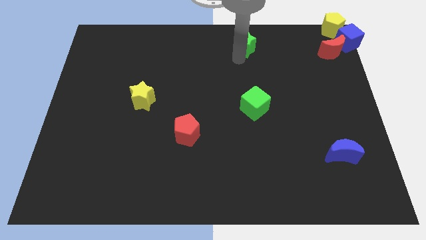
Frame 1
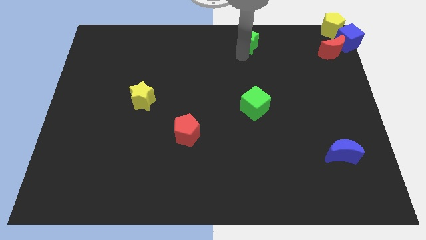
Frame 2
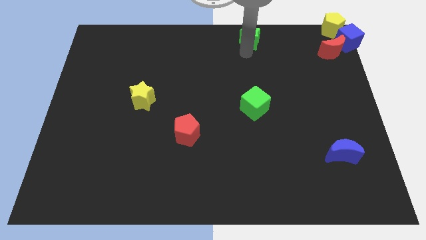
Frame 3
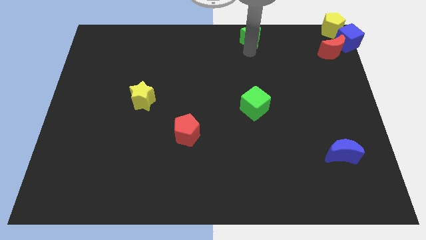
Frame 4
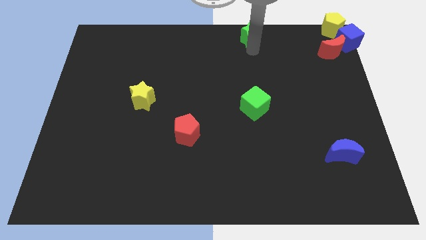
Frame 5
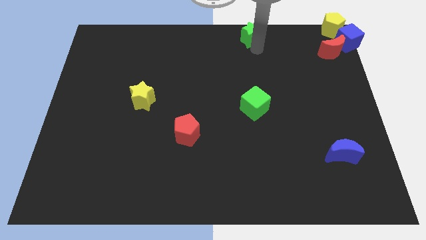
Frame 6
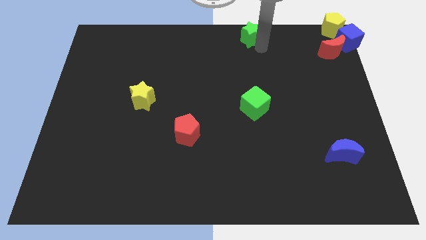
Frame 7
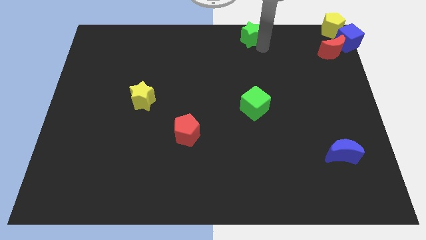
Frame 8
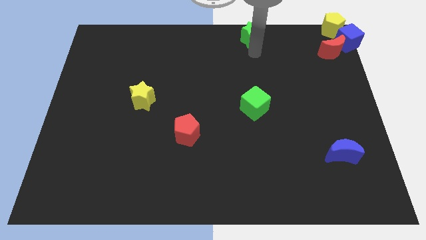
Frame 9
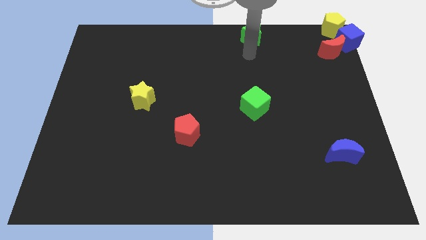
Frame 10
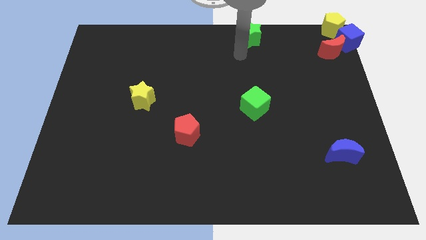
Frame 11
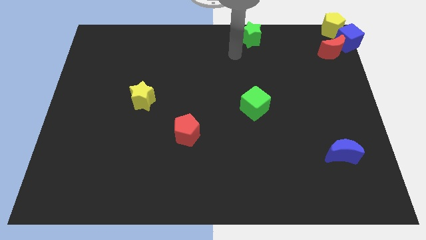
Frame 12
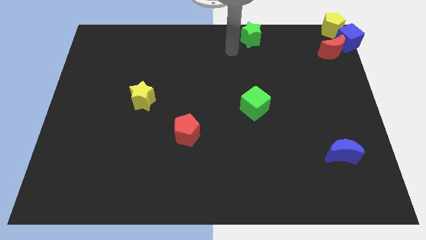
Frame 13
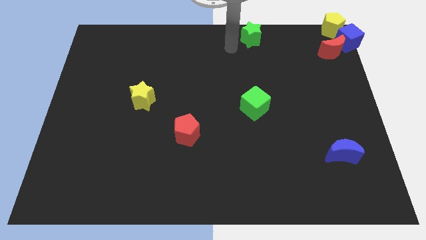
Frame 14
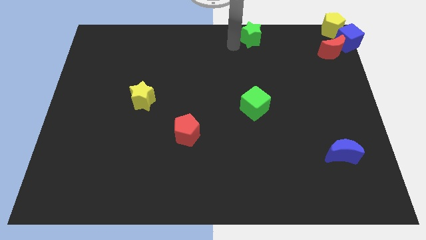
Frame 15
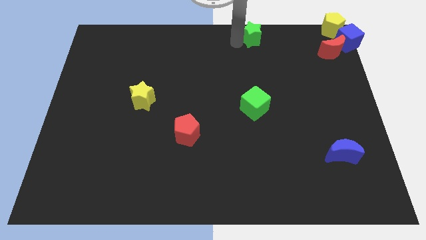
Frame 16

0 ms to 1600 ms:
push the green star slightly to the top

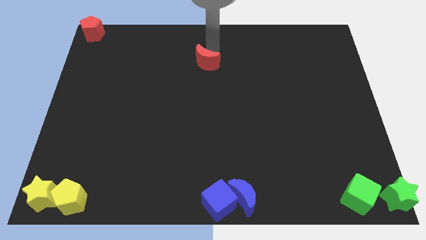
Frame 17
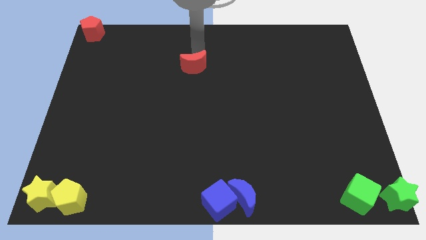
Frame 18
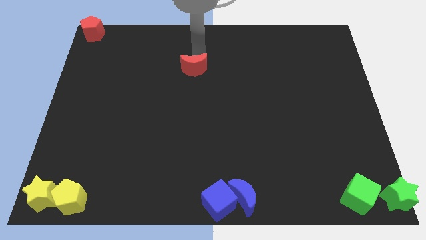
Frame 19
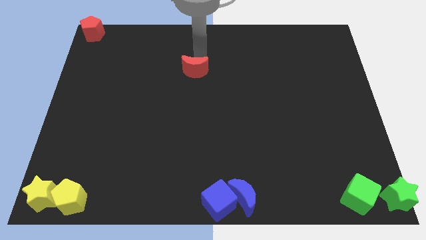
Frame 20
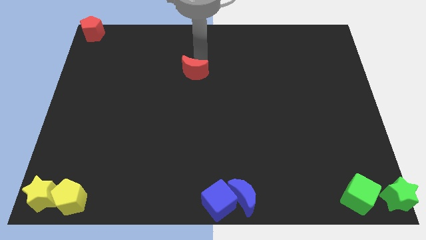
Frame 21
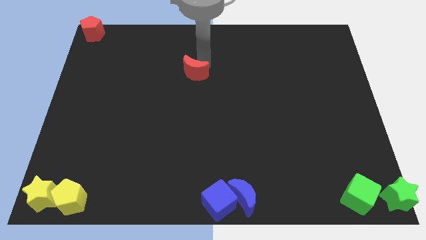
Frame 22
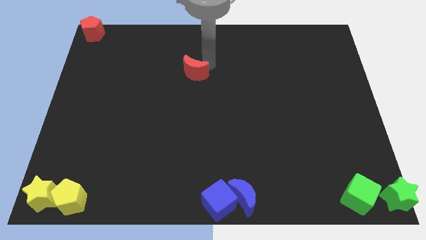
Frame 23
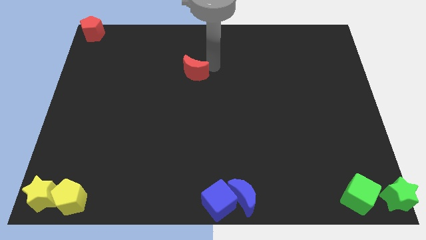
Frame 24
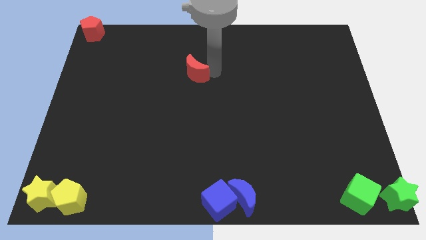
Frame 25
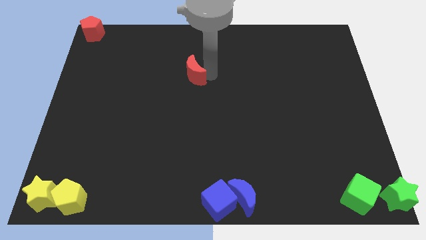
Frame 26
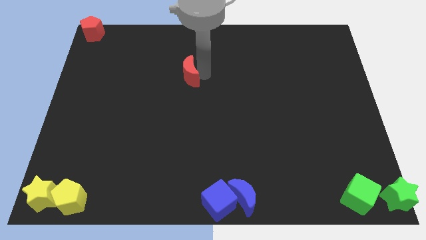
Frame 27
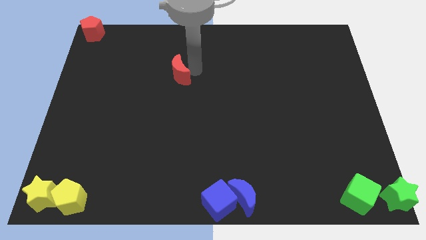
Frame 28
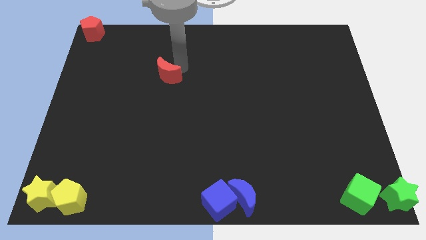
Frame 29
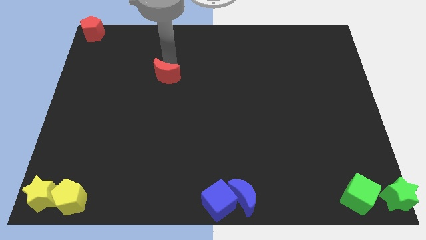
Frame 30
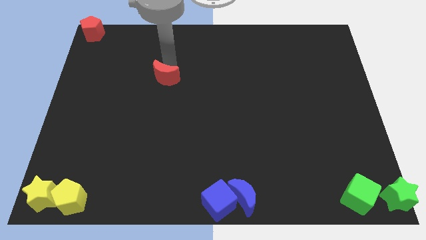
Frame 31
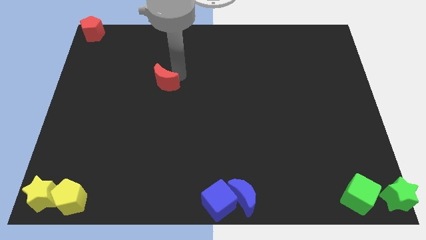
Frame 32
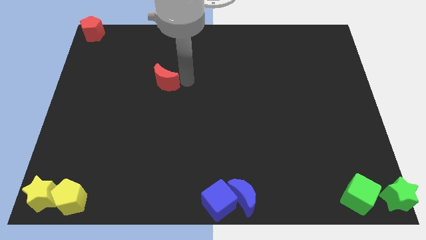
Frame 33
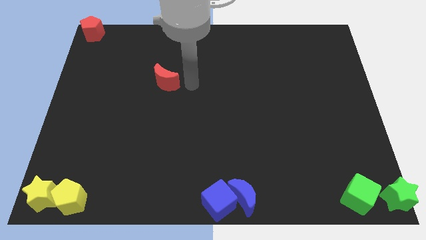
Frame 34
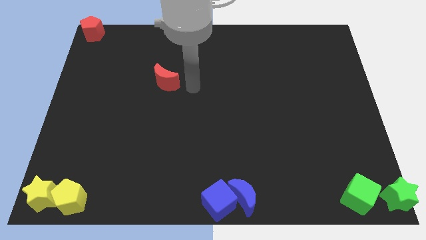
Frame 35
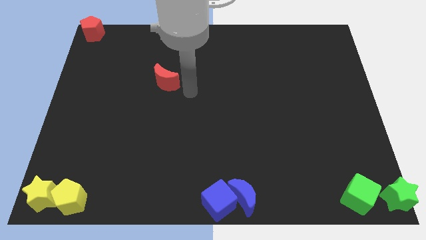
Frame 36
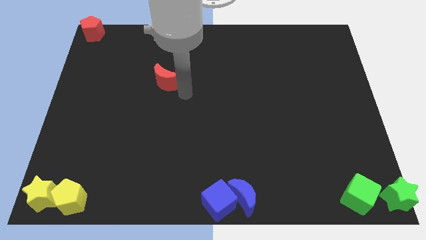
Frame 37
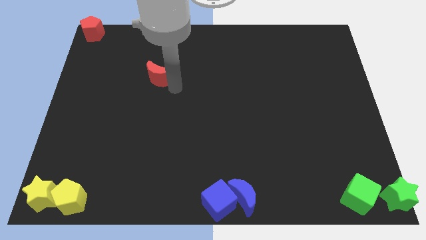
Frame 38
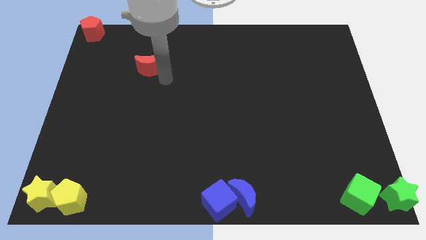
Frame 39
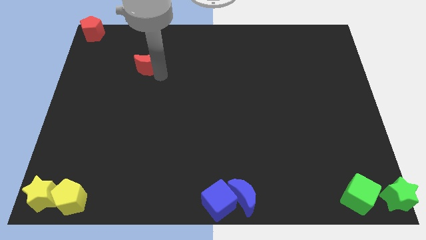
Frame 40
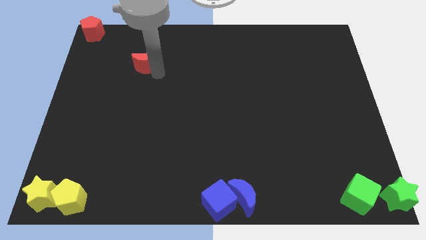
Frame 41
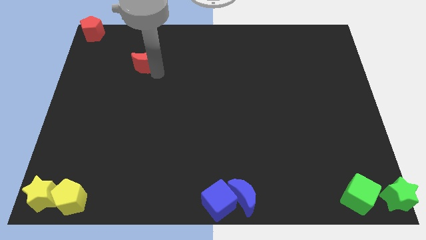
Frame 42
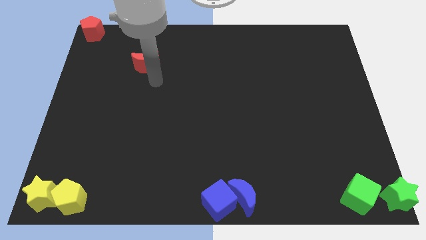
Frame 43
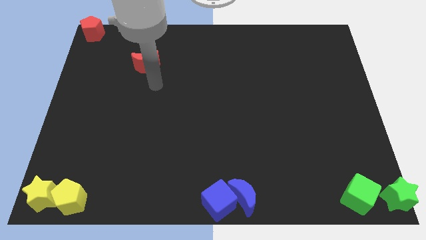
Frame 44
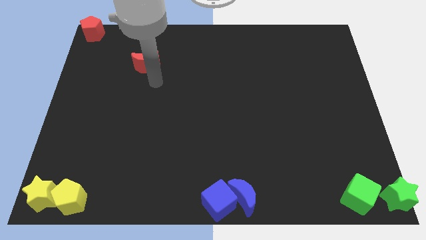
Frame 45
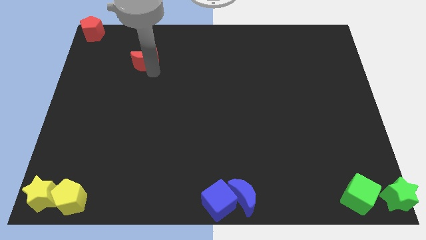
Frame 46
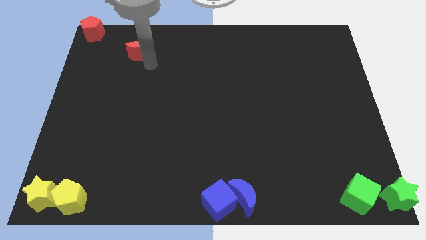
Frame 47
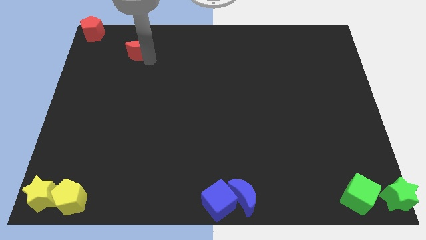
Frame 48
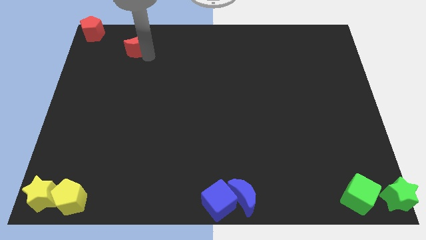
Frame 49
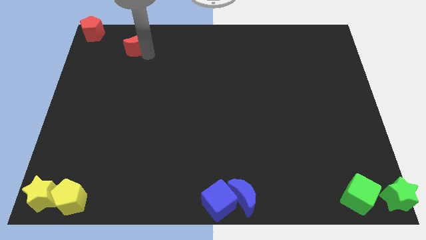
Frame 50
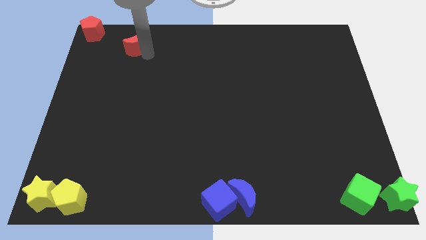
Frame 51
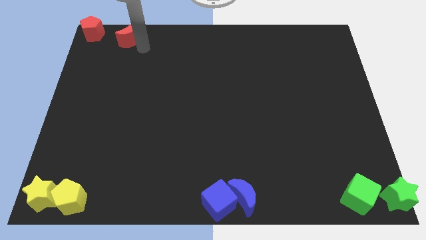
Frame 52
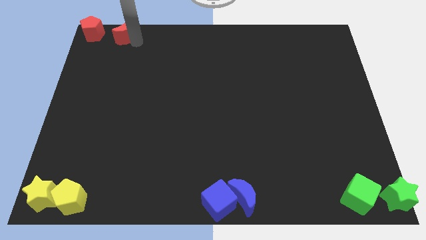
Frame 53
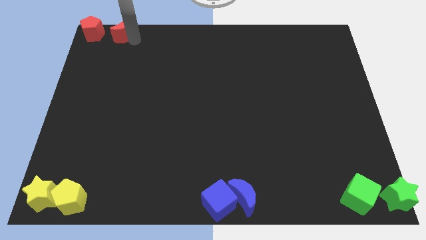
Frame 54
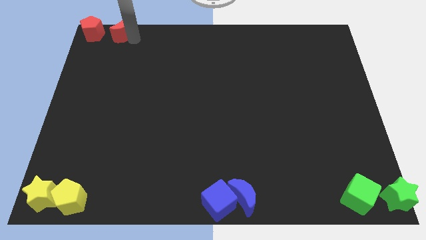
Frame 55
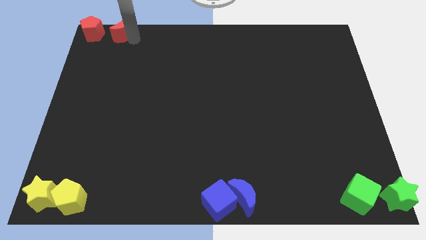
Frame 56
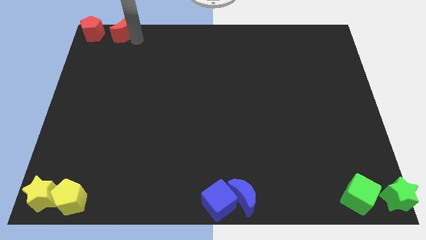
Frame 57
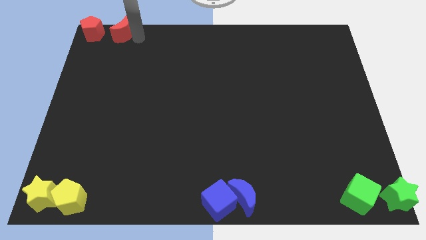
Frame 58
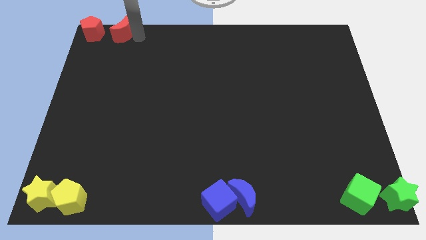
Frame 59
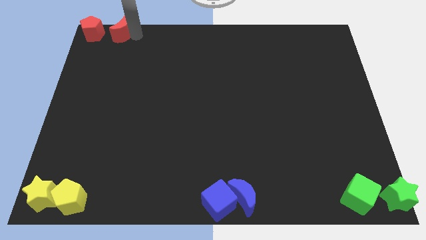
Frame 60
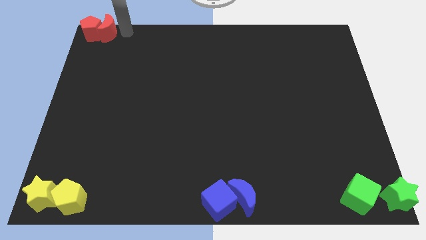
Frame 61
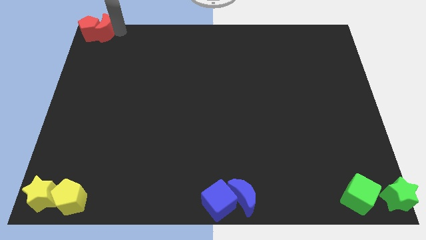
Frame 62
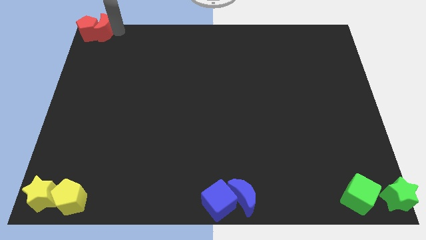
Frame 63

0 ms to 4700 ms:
push the red moon into the red pentagon

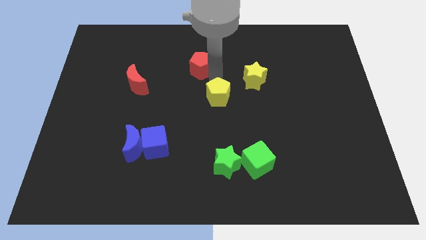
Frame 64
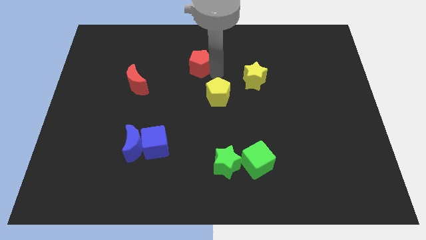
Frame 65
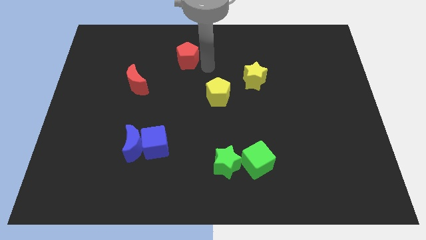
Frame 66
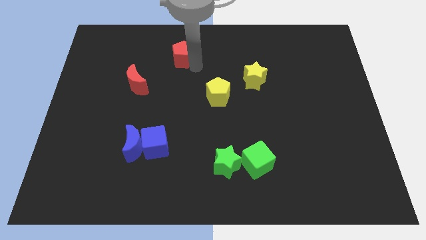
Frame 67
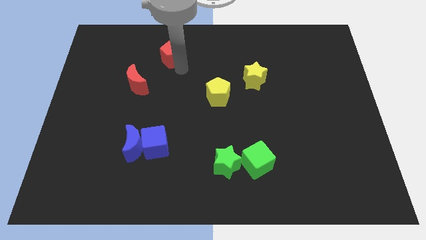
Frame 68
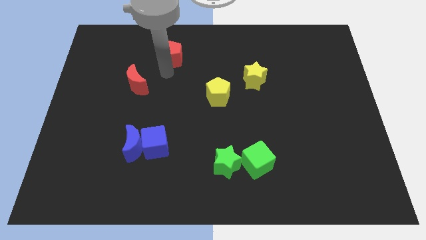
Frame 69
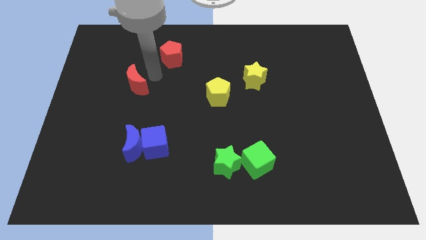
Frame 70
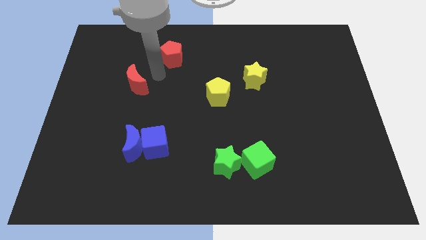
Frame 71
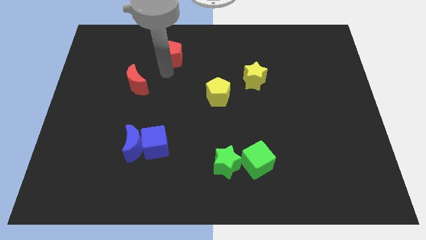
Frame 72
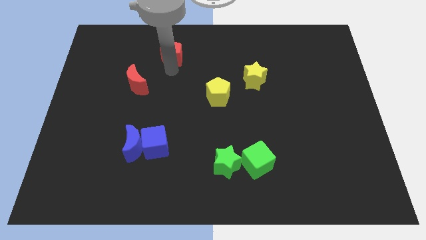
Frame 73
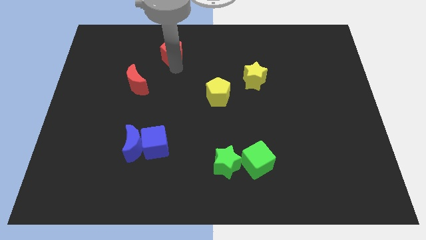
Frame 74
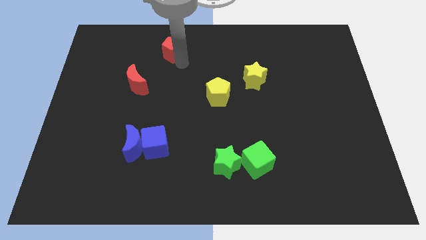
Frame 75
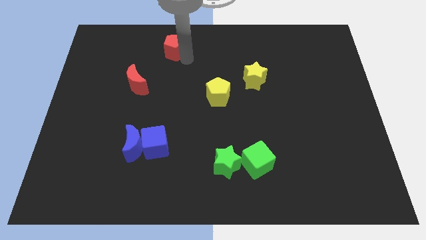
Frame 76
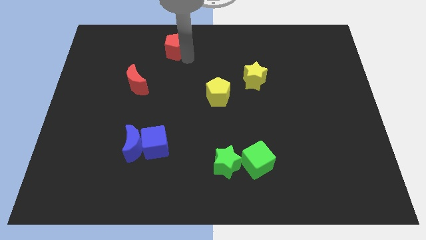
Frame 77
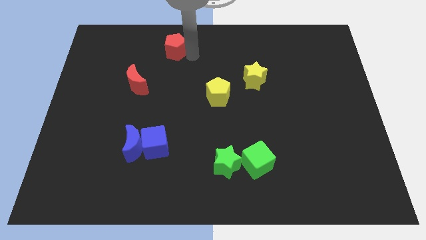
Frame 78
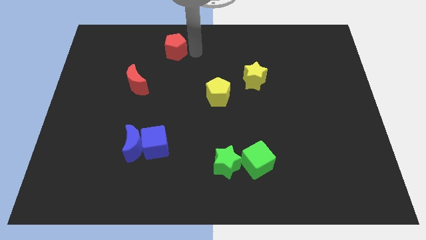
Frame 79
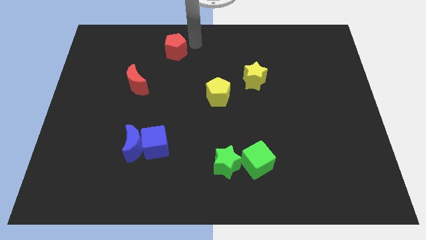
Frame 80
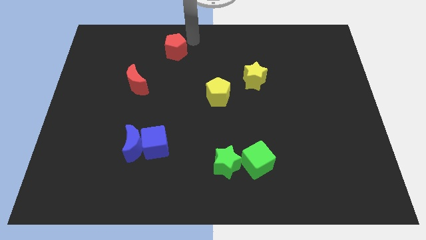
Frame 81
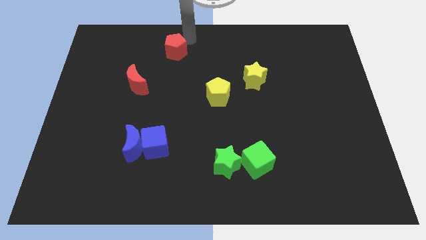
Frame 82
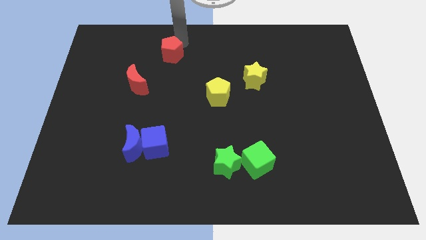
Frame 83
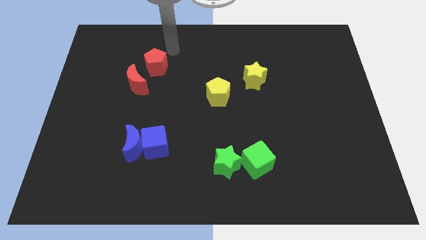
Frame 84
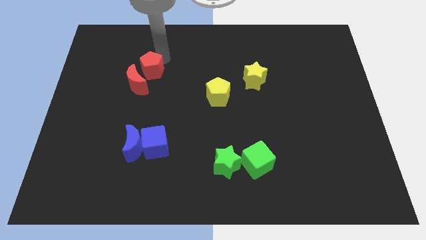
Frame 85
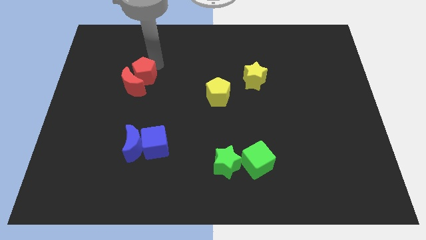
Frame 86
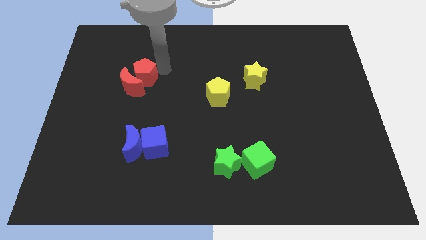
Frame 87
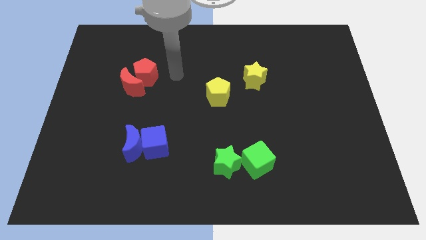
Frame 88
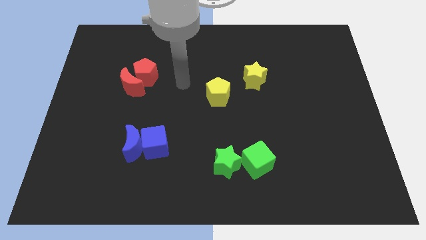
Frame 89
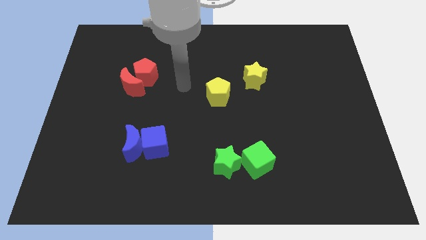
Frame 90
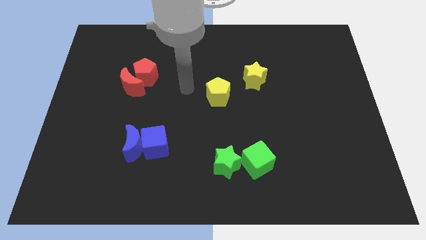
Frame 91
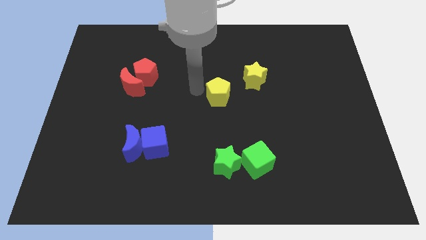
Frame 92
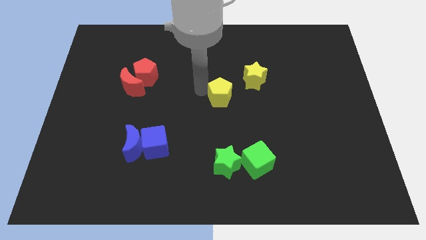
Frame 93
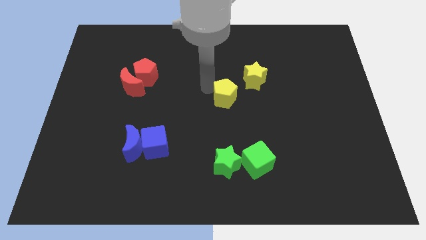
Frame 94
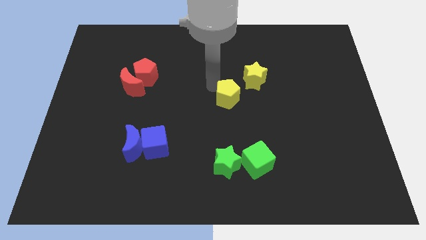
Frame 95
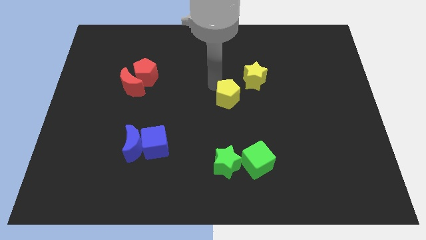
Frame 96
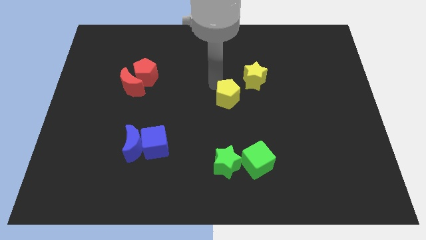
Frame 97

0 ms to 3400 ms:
group up the red blocks together above the group of blue blocks
